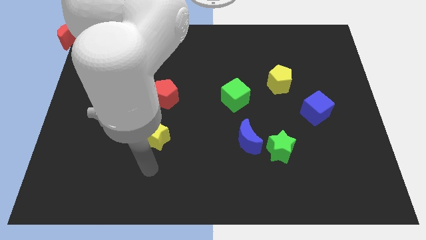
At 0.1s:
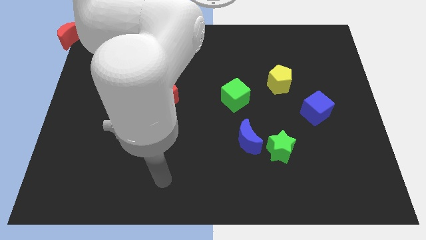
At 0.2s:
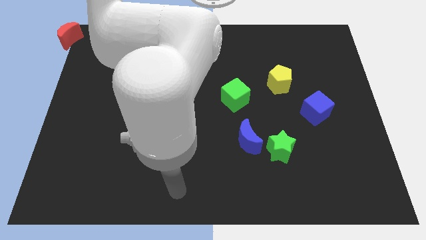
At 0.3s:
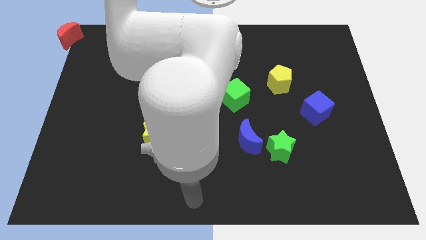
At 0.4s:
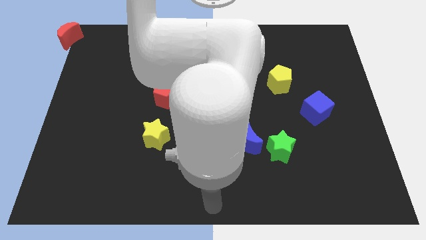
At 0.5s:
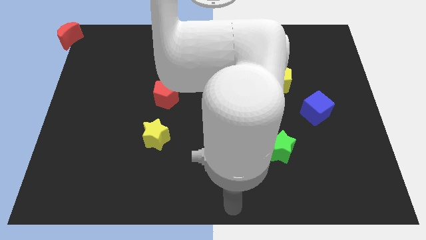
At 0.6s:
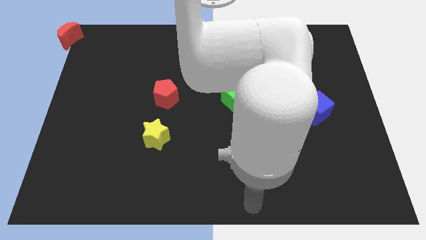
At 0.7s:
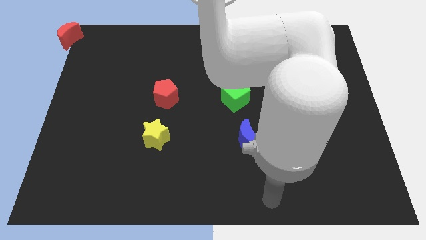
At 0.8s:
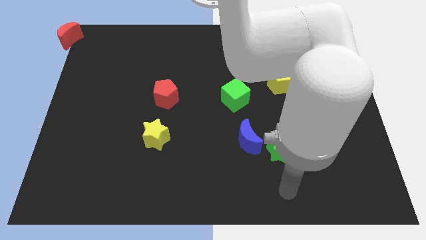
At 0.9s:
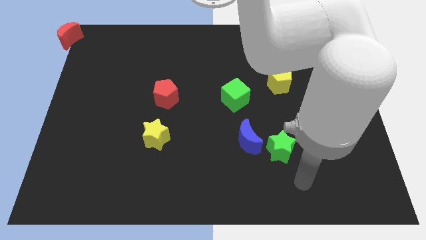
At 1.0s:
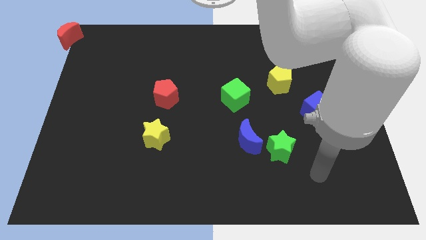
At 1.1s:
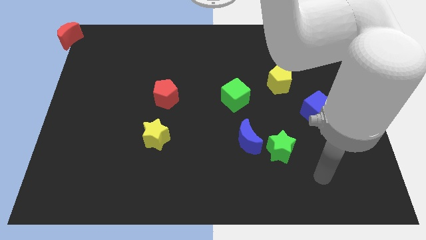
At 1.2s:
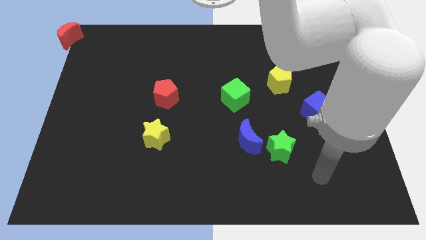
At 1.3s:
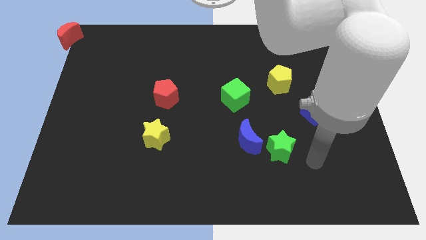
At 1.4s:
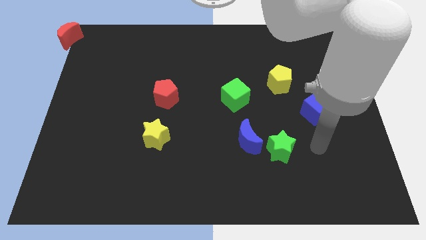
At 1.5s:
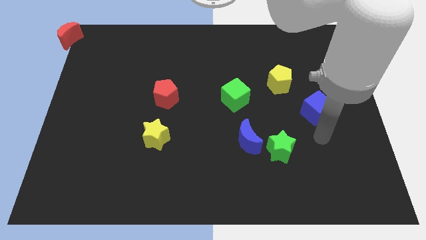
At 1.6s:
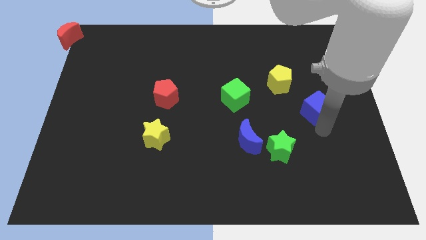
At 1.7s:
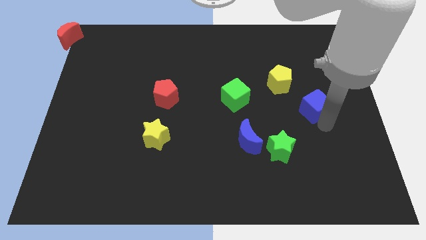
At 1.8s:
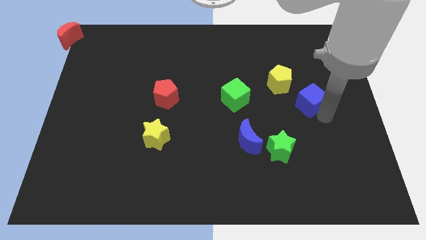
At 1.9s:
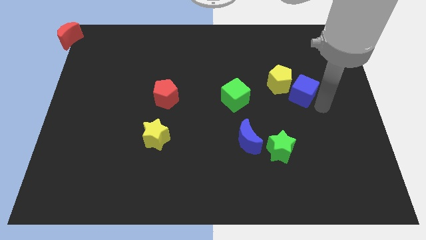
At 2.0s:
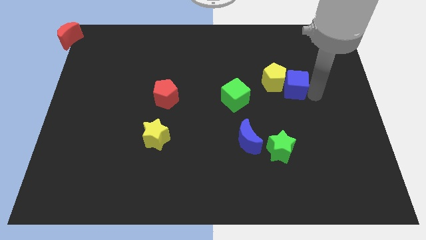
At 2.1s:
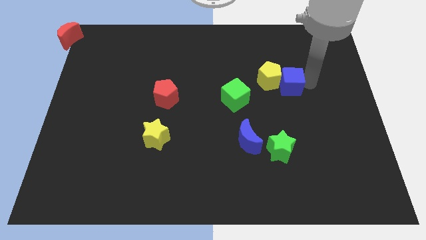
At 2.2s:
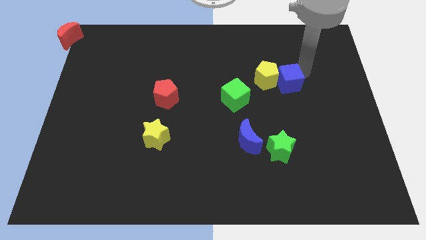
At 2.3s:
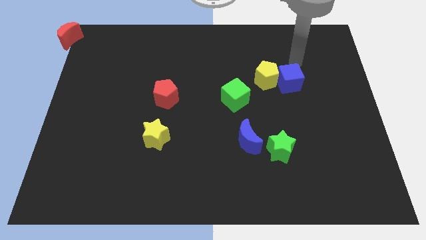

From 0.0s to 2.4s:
move the blue cube into the right of the yellow pentagon

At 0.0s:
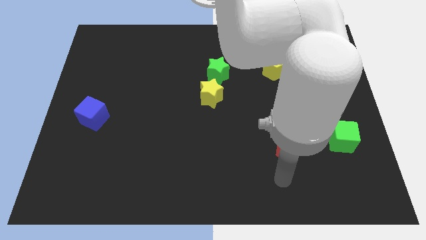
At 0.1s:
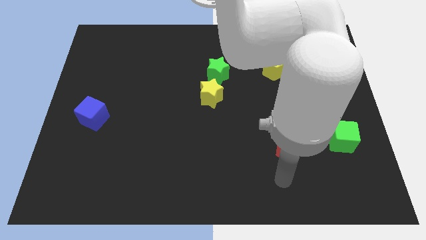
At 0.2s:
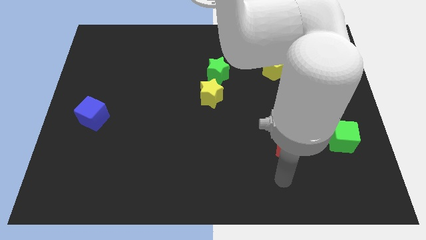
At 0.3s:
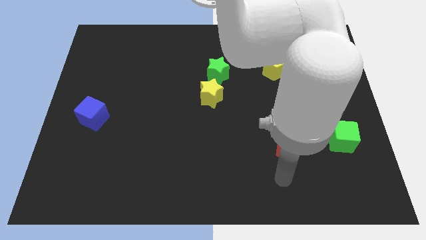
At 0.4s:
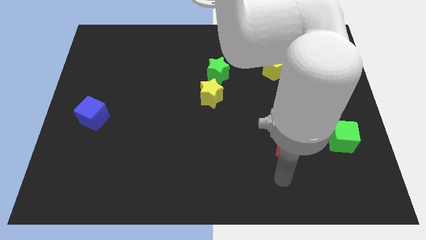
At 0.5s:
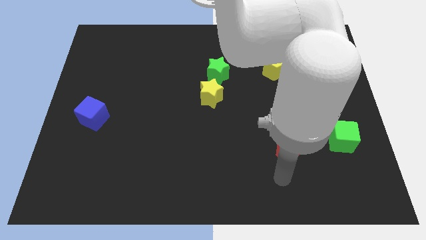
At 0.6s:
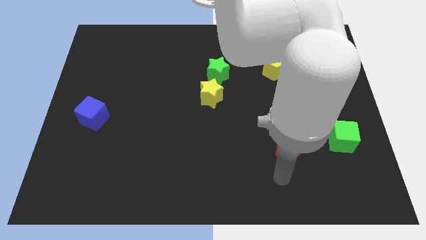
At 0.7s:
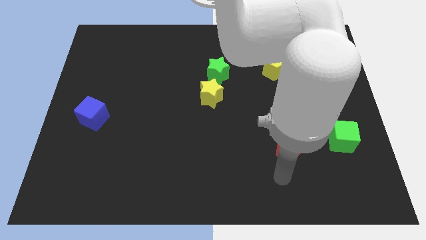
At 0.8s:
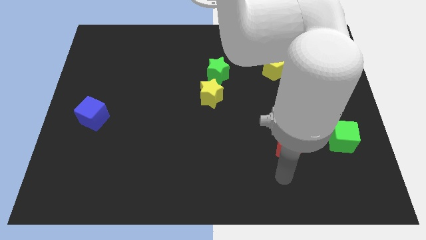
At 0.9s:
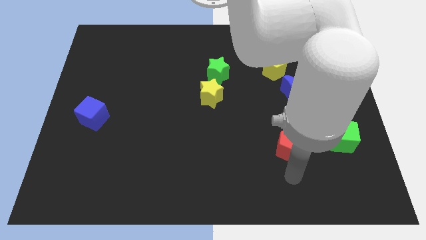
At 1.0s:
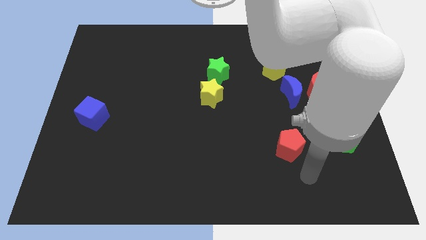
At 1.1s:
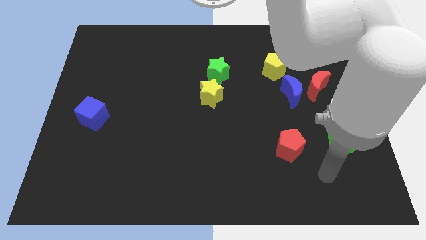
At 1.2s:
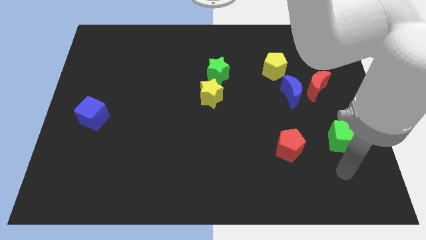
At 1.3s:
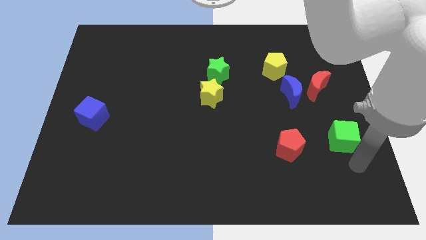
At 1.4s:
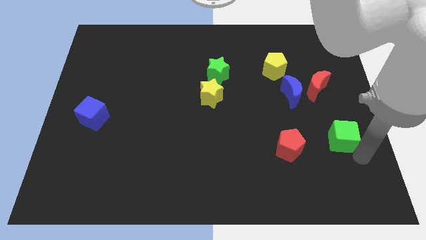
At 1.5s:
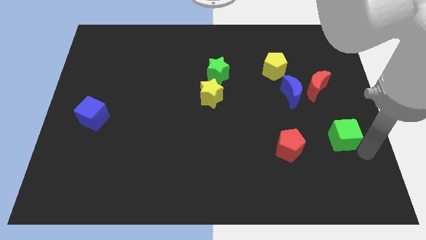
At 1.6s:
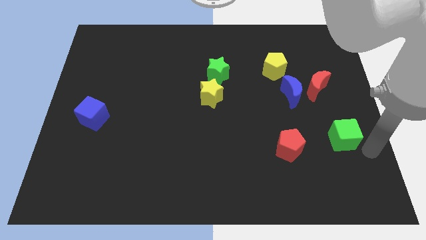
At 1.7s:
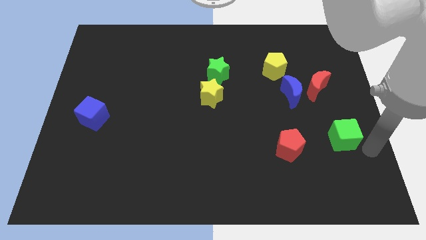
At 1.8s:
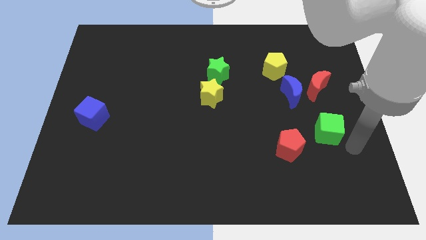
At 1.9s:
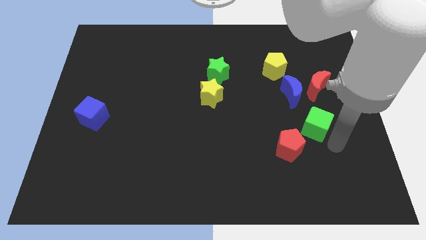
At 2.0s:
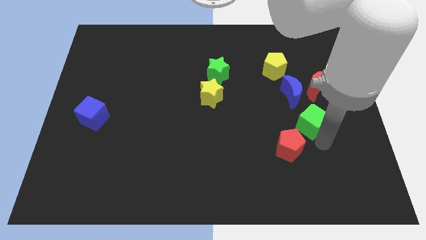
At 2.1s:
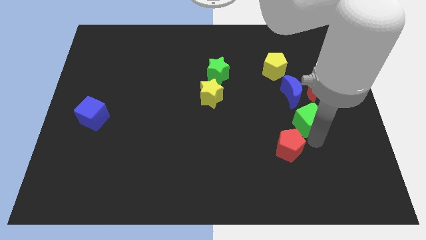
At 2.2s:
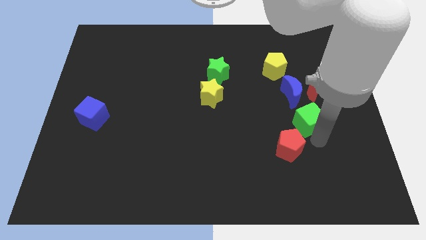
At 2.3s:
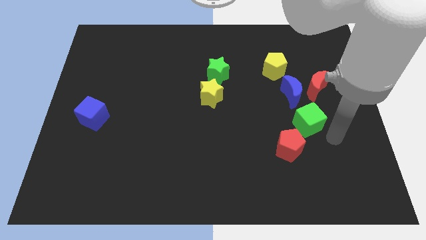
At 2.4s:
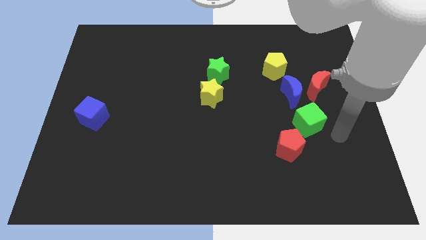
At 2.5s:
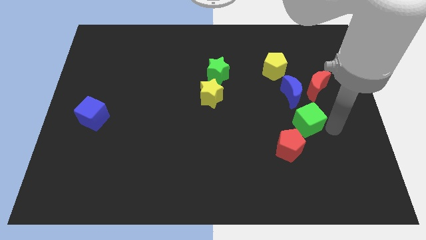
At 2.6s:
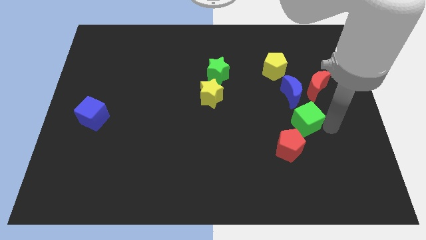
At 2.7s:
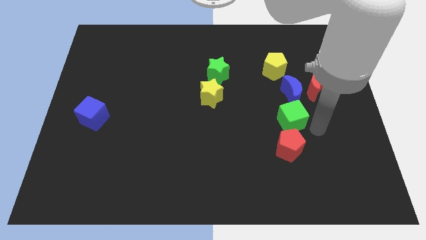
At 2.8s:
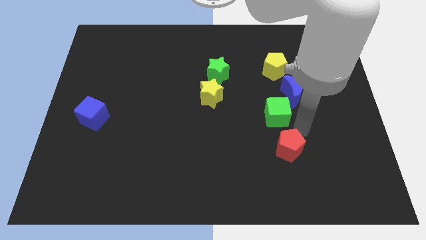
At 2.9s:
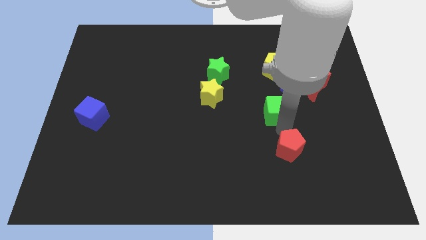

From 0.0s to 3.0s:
slightly move the green cube to the top left of red pentagon

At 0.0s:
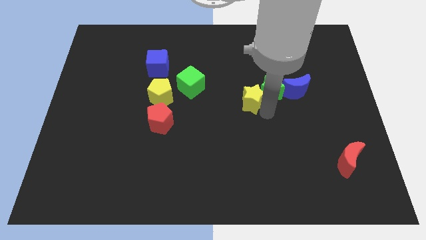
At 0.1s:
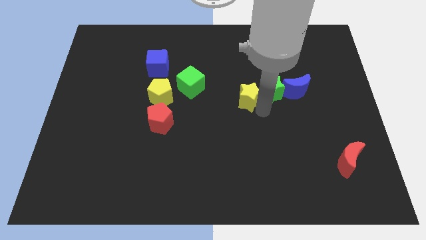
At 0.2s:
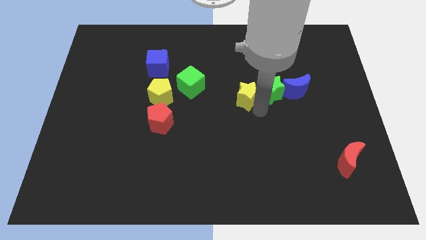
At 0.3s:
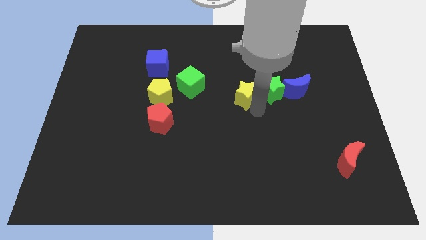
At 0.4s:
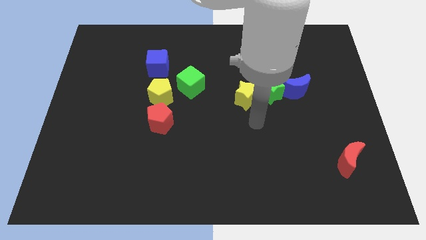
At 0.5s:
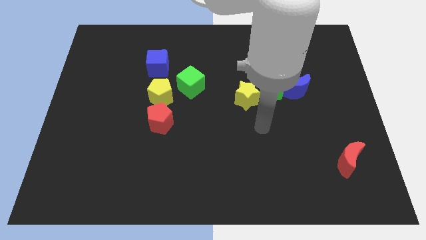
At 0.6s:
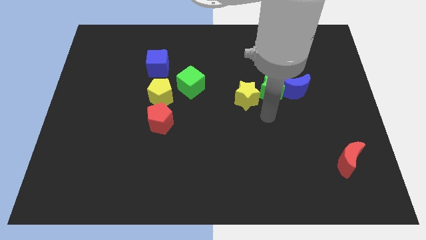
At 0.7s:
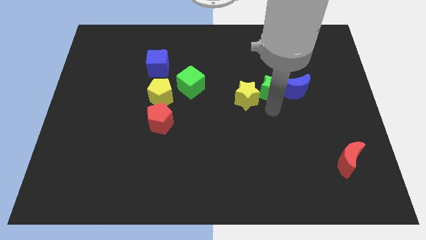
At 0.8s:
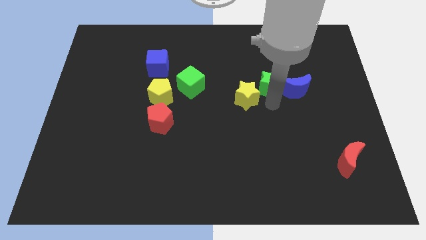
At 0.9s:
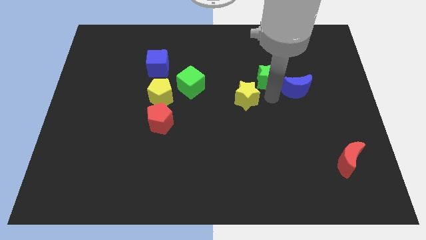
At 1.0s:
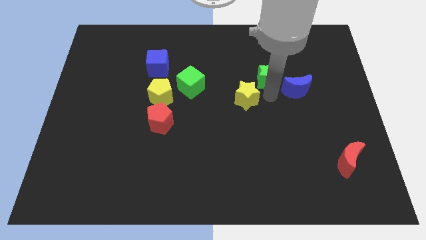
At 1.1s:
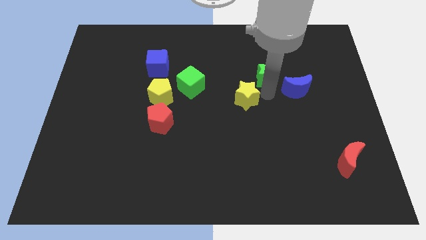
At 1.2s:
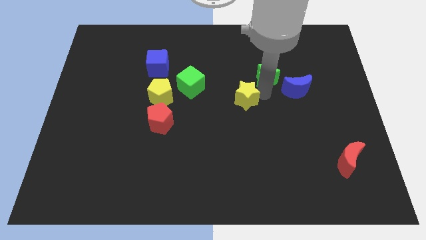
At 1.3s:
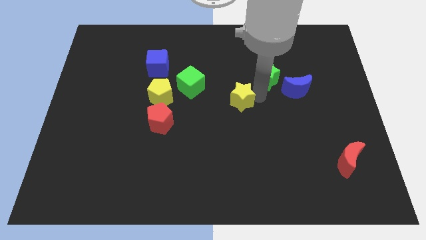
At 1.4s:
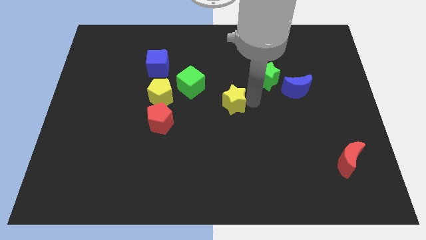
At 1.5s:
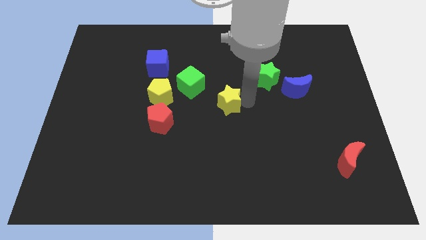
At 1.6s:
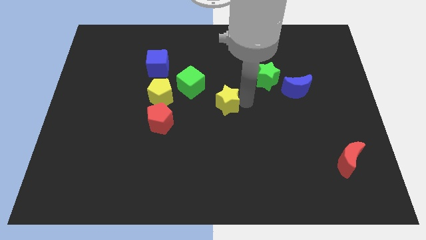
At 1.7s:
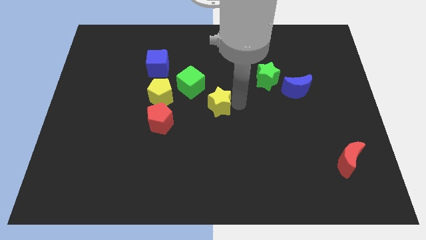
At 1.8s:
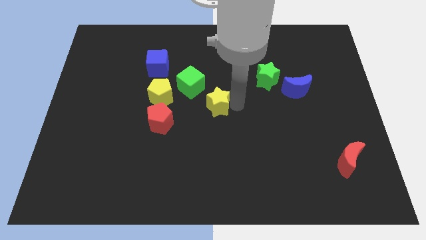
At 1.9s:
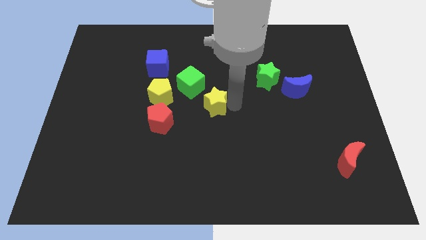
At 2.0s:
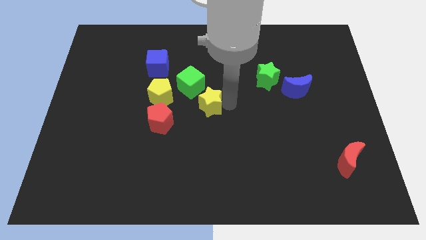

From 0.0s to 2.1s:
move the yellow star to the diagonally bottom right to the green cube

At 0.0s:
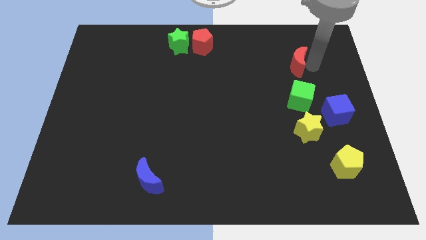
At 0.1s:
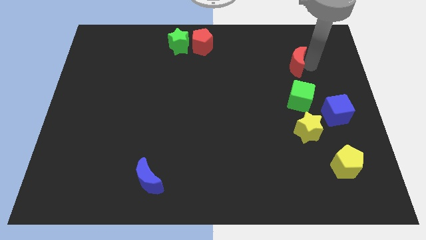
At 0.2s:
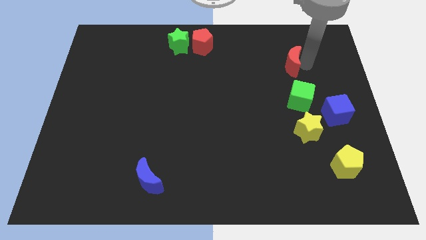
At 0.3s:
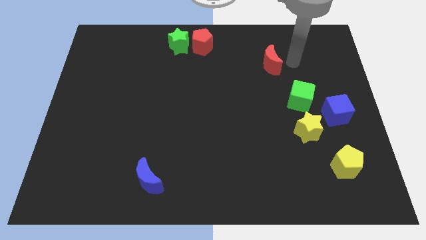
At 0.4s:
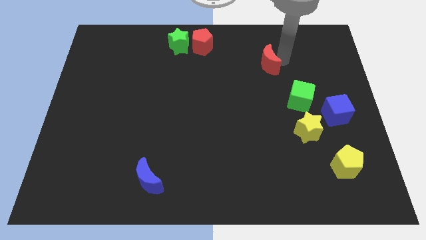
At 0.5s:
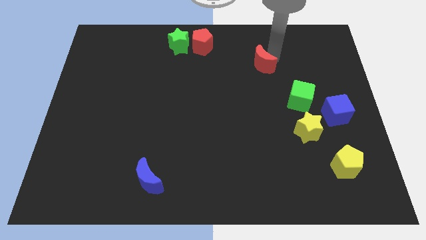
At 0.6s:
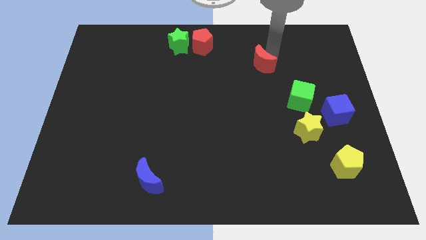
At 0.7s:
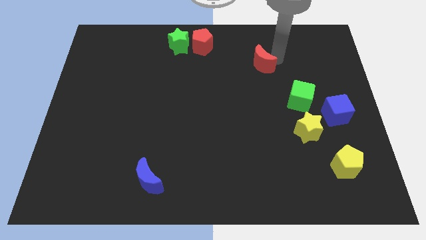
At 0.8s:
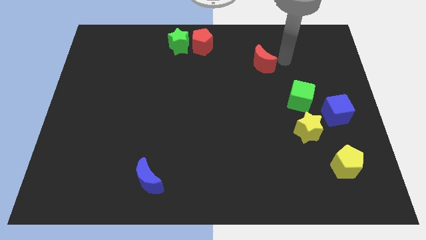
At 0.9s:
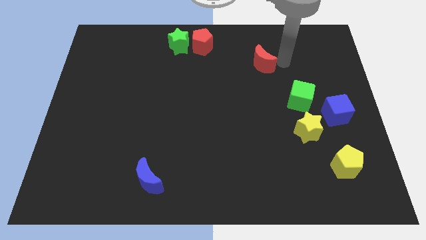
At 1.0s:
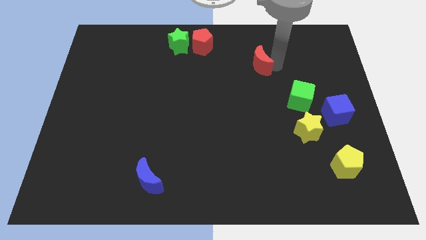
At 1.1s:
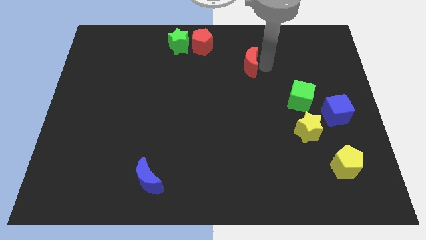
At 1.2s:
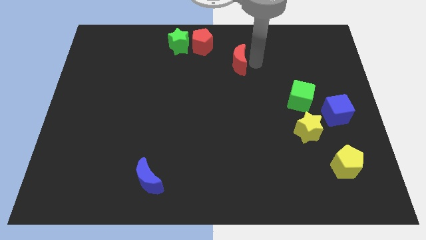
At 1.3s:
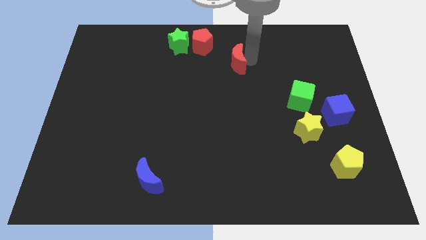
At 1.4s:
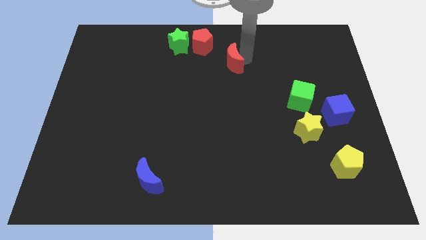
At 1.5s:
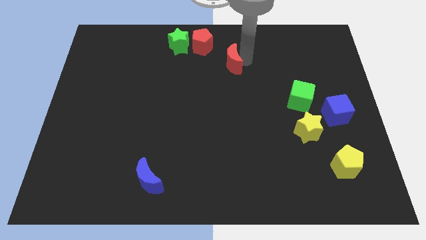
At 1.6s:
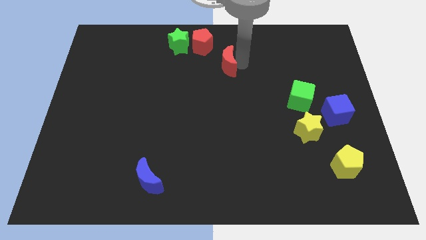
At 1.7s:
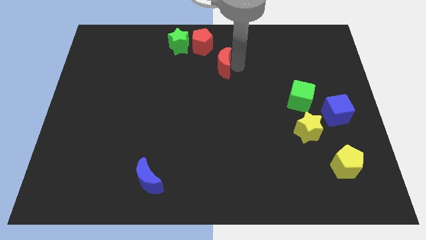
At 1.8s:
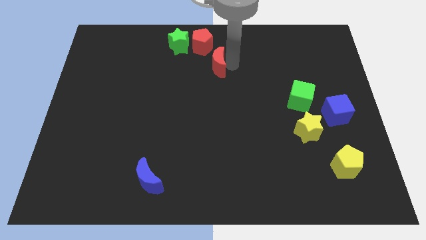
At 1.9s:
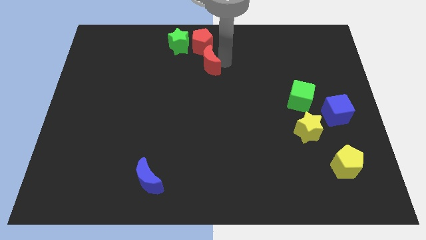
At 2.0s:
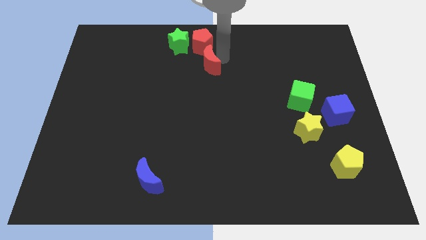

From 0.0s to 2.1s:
place the red crescent below the red pentagon
